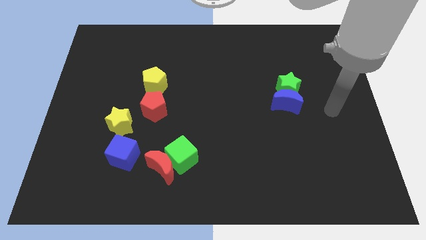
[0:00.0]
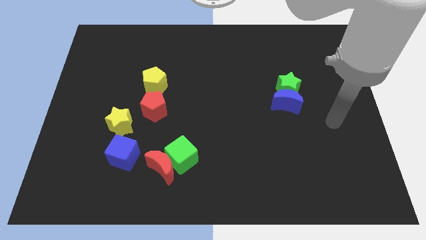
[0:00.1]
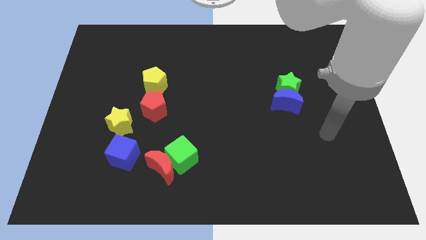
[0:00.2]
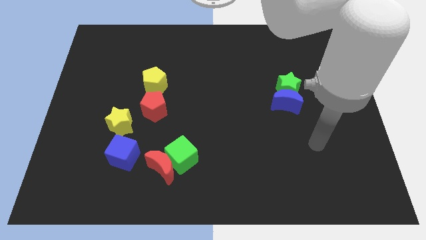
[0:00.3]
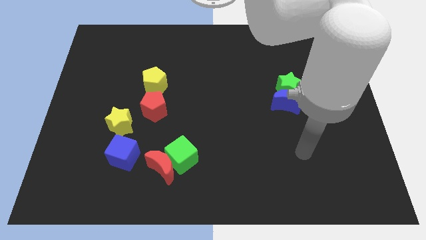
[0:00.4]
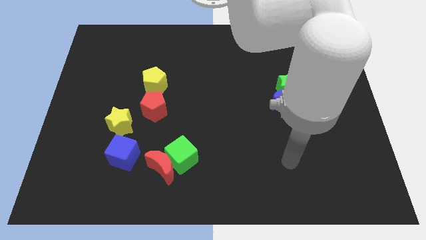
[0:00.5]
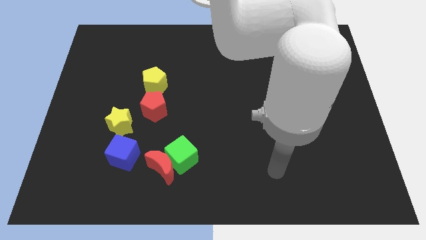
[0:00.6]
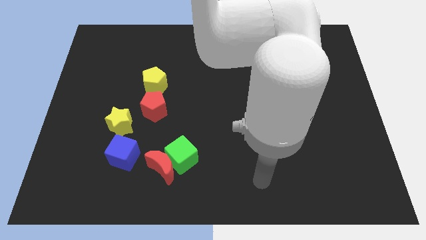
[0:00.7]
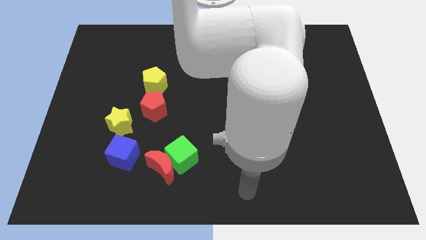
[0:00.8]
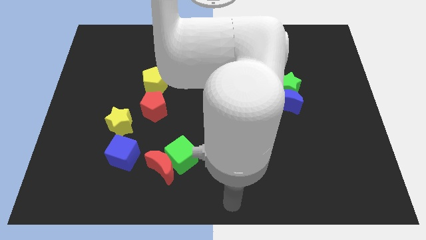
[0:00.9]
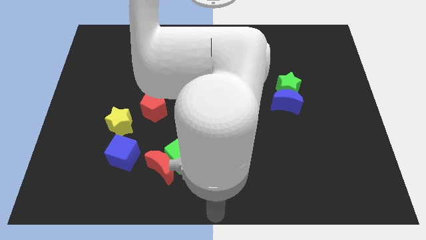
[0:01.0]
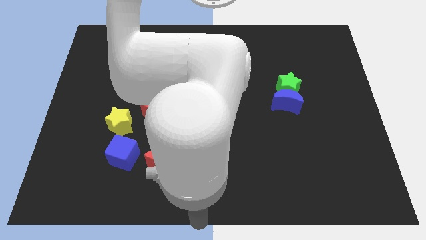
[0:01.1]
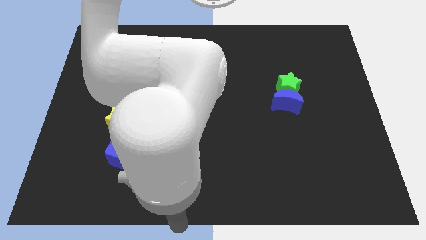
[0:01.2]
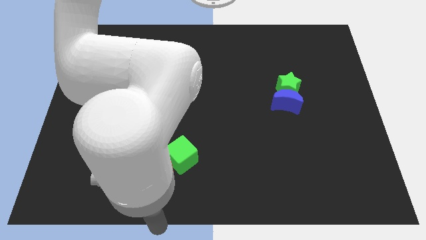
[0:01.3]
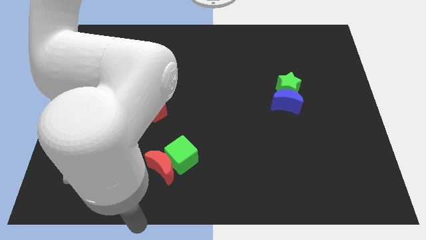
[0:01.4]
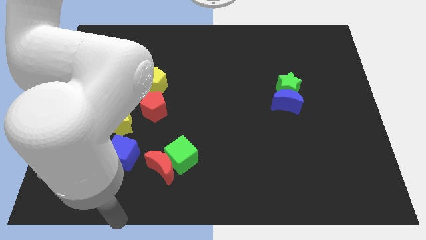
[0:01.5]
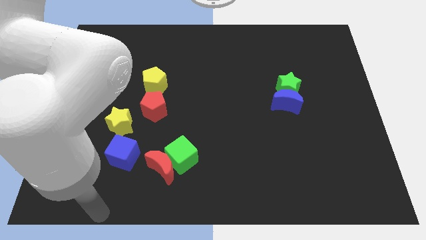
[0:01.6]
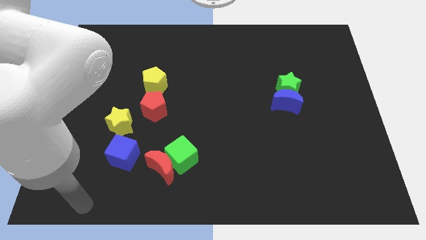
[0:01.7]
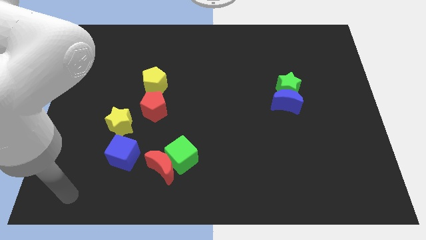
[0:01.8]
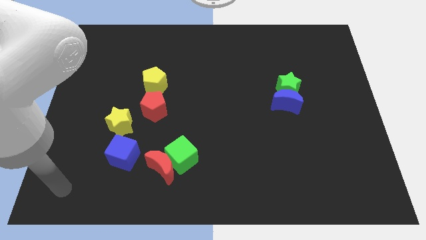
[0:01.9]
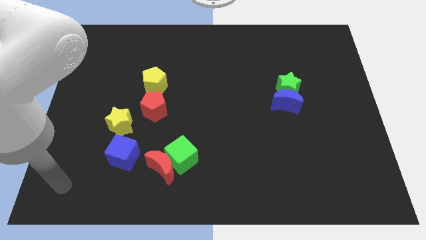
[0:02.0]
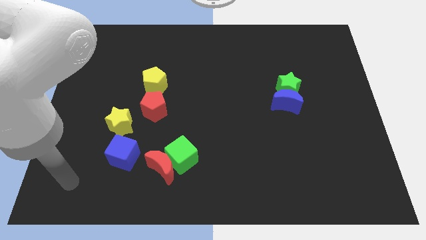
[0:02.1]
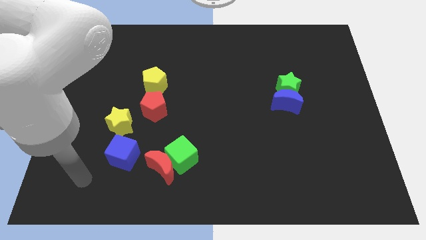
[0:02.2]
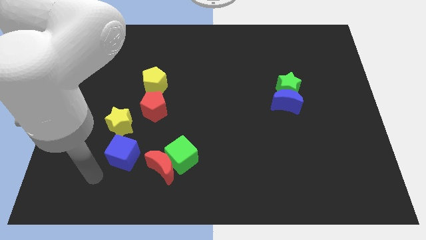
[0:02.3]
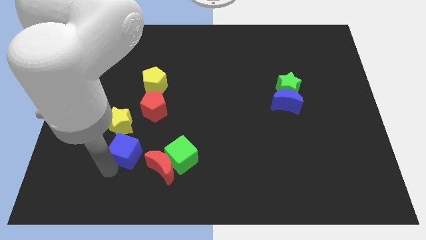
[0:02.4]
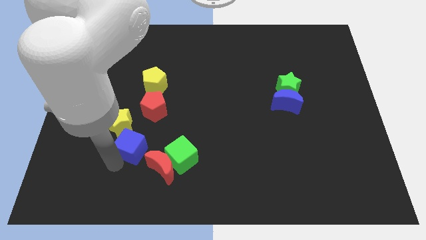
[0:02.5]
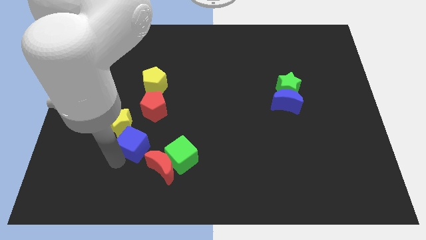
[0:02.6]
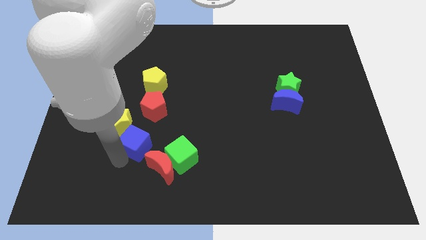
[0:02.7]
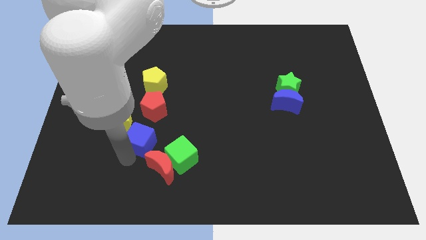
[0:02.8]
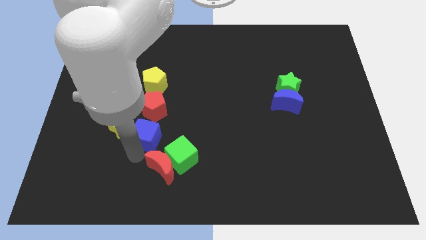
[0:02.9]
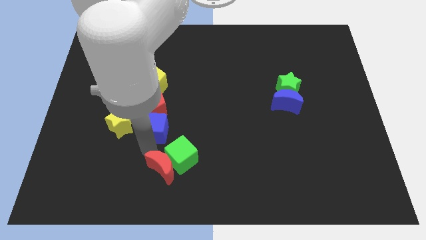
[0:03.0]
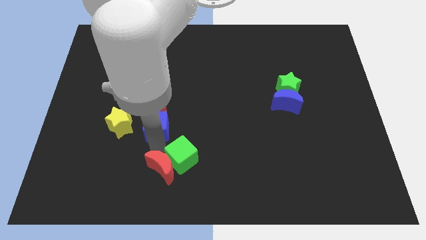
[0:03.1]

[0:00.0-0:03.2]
place blue cube in between the red pentagon and the red moon

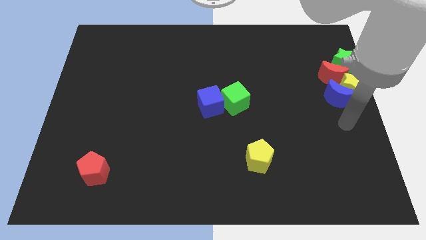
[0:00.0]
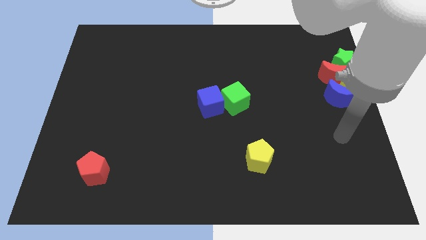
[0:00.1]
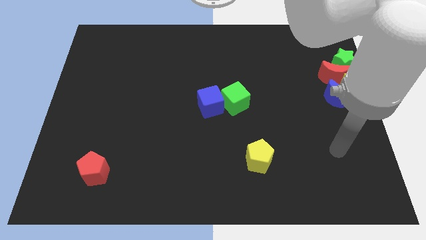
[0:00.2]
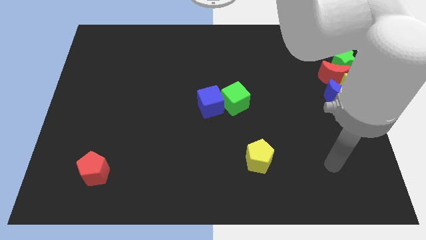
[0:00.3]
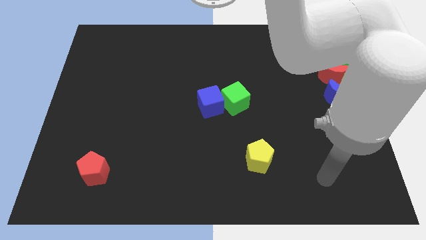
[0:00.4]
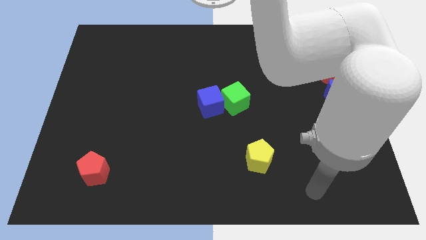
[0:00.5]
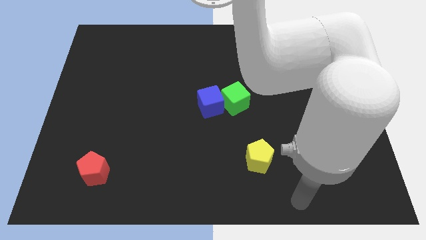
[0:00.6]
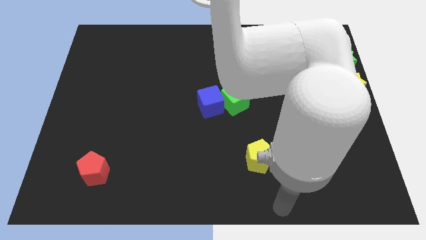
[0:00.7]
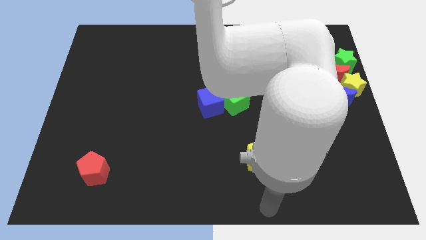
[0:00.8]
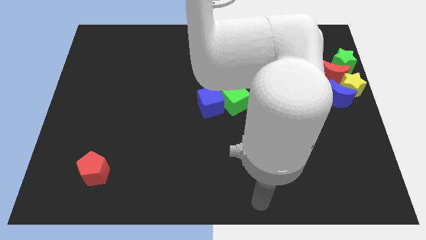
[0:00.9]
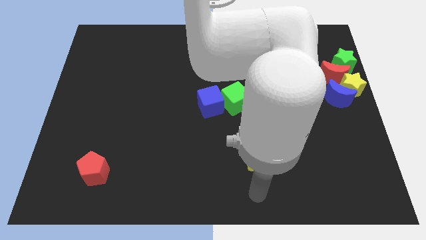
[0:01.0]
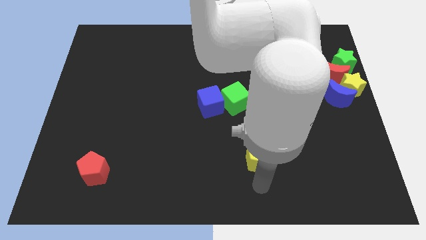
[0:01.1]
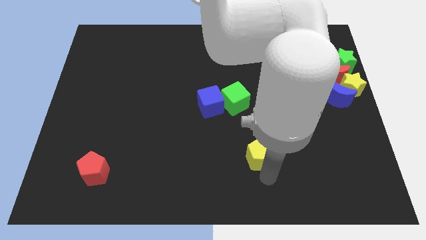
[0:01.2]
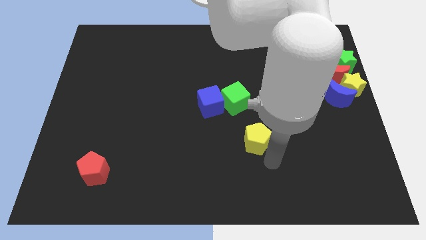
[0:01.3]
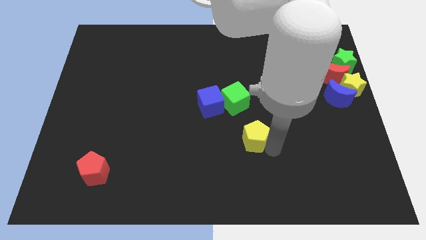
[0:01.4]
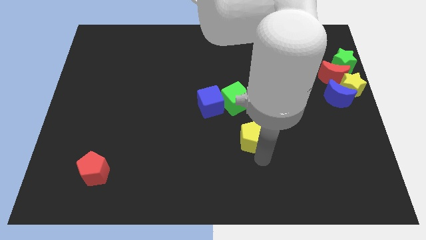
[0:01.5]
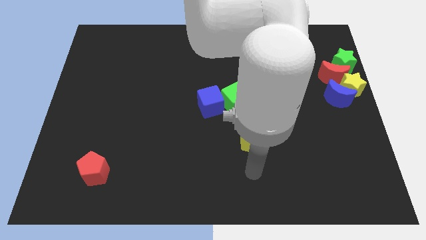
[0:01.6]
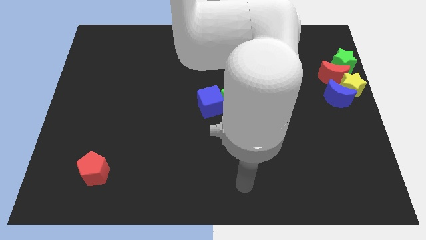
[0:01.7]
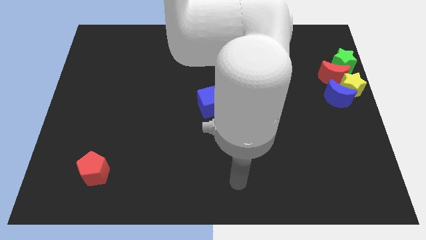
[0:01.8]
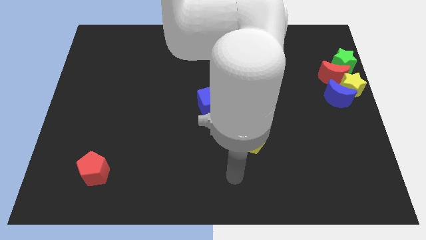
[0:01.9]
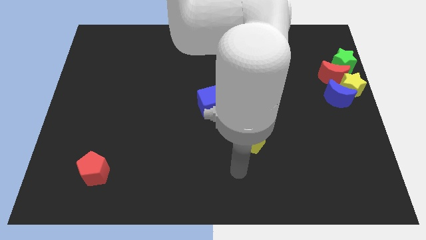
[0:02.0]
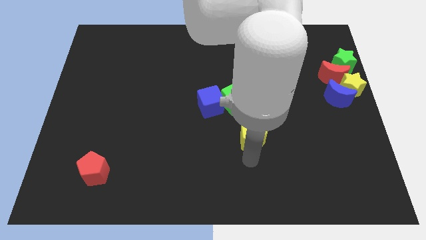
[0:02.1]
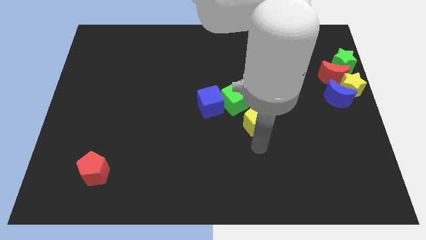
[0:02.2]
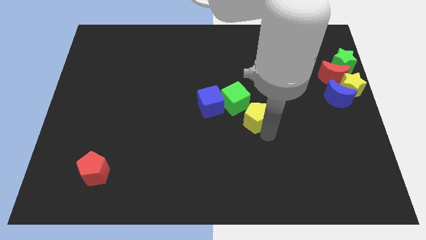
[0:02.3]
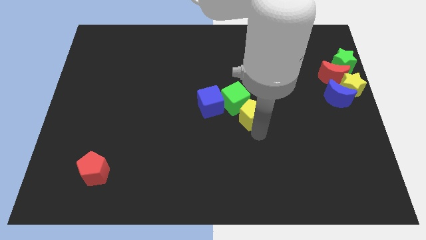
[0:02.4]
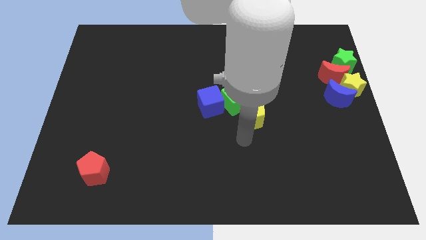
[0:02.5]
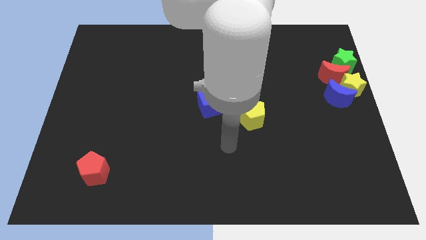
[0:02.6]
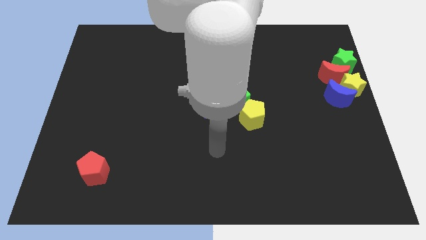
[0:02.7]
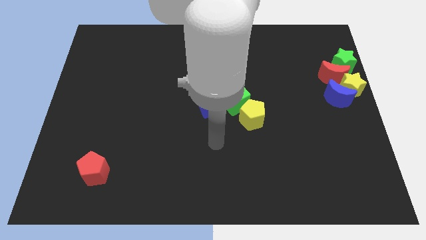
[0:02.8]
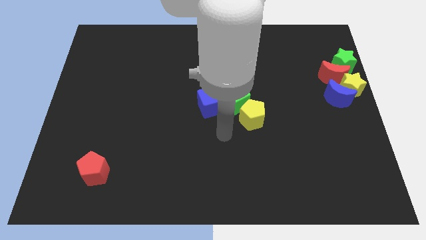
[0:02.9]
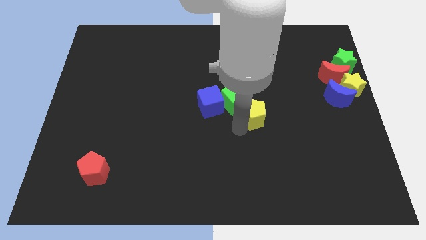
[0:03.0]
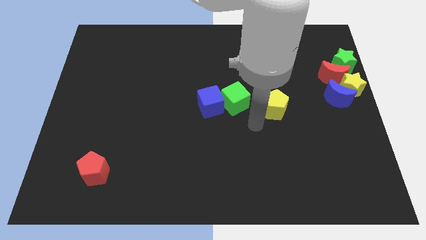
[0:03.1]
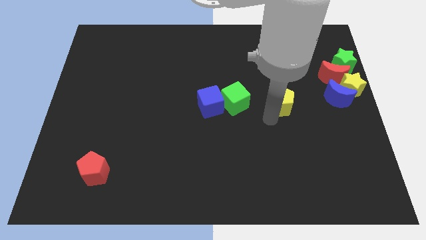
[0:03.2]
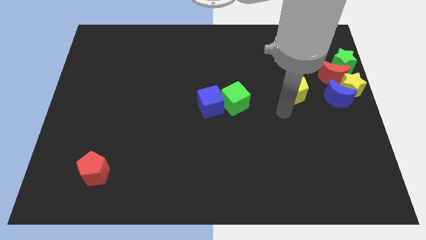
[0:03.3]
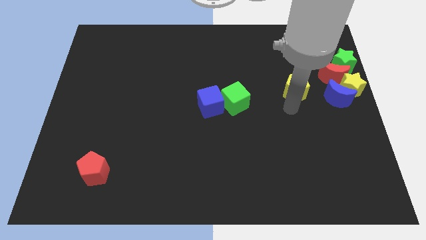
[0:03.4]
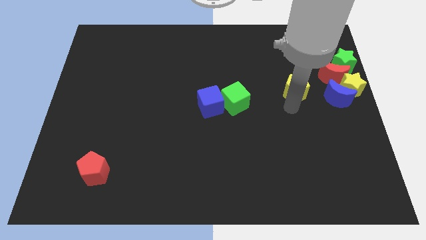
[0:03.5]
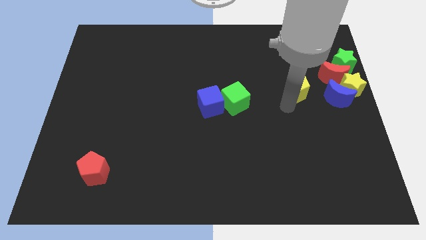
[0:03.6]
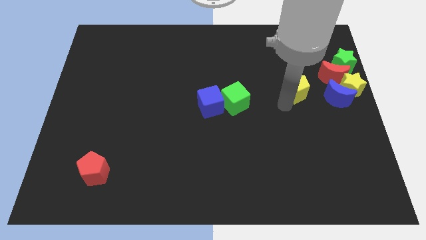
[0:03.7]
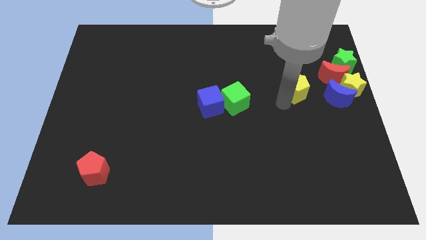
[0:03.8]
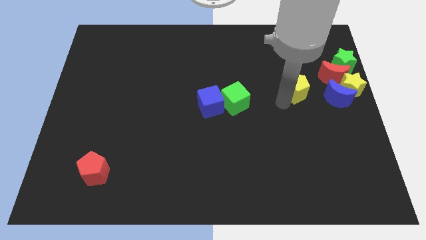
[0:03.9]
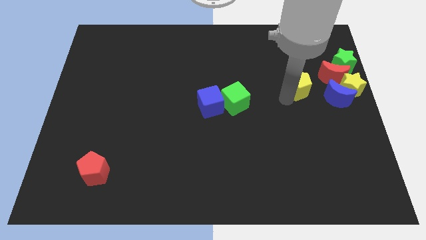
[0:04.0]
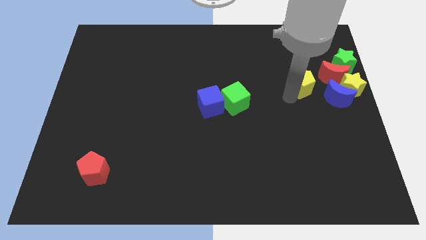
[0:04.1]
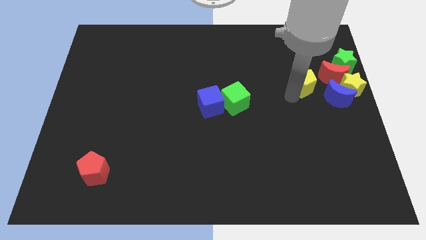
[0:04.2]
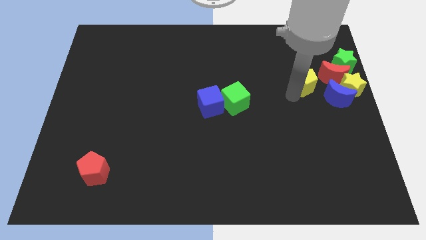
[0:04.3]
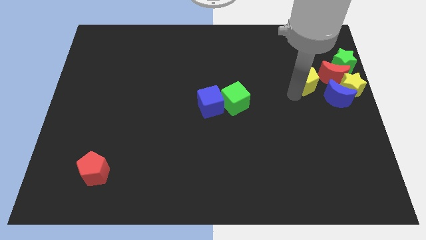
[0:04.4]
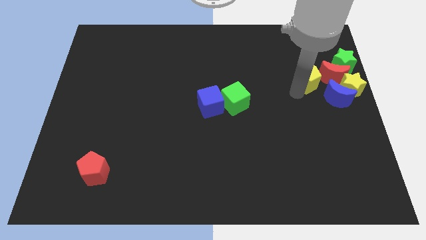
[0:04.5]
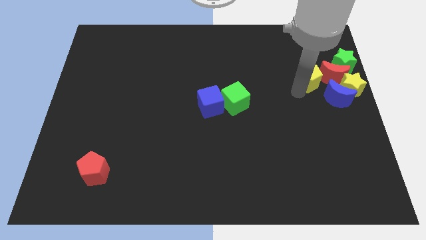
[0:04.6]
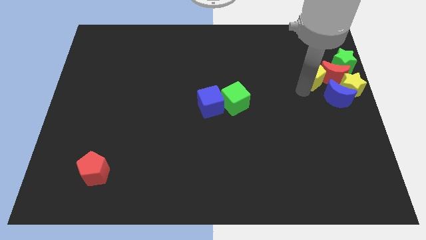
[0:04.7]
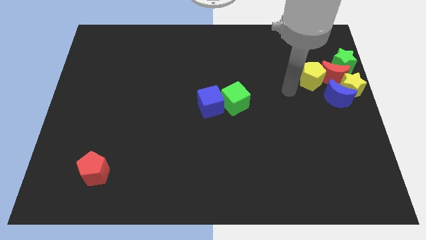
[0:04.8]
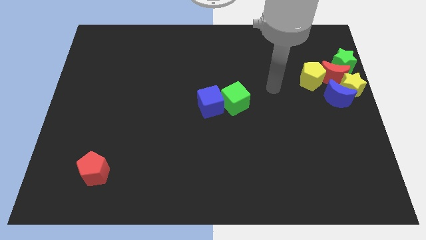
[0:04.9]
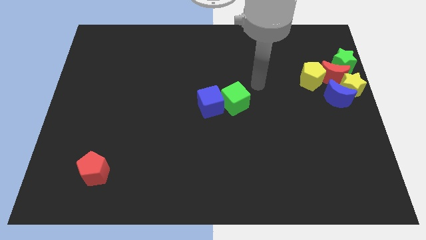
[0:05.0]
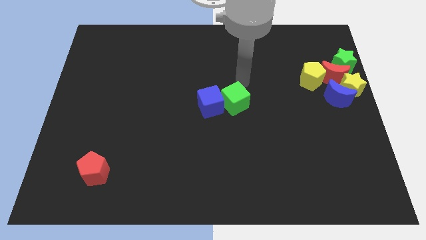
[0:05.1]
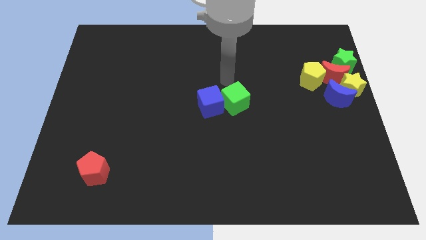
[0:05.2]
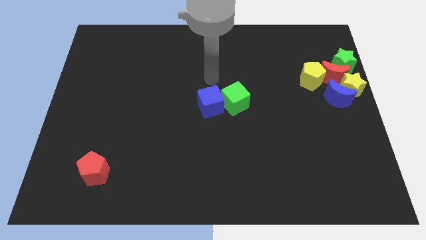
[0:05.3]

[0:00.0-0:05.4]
move the yellow pentagon left to the group of blocks
